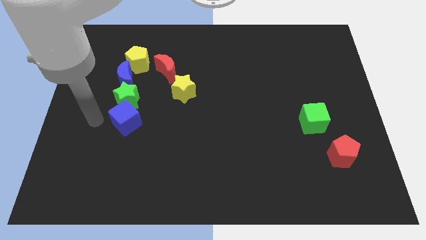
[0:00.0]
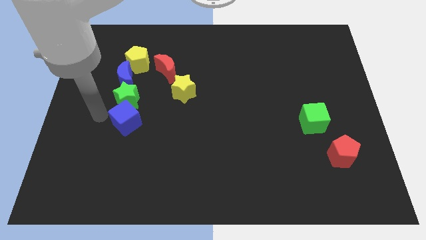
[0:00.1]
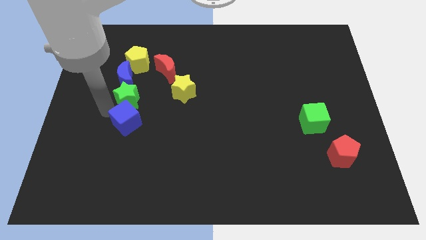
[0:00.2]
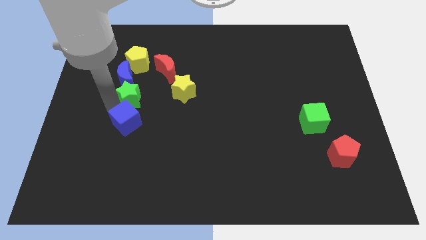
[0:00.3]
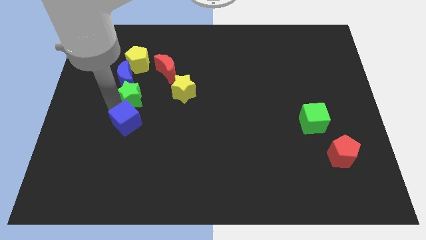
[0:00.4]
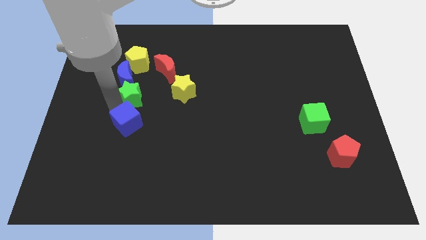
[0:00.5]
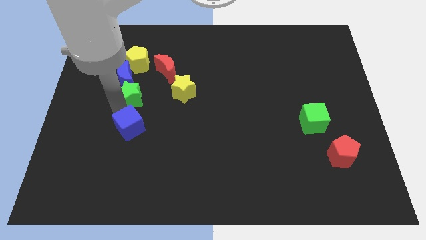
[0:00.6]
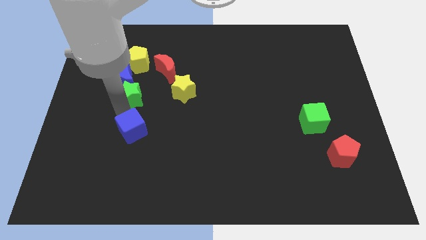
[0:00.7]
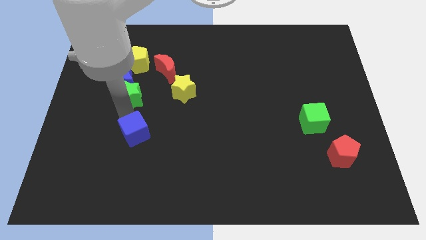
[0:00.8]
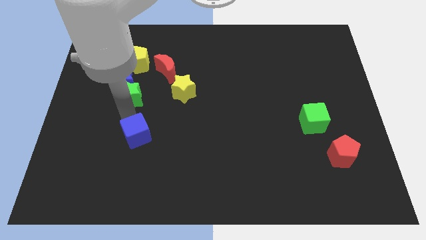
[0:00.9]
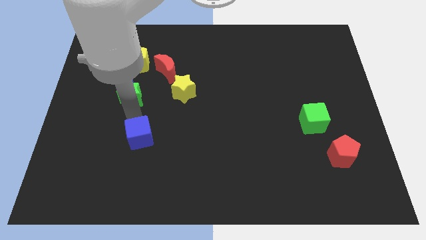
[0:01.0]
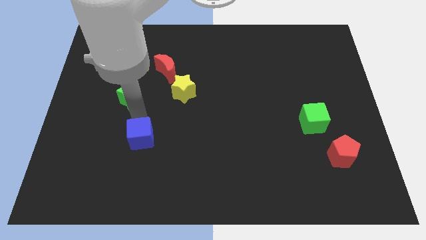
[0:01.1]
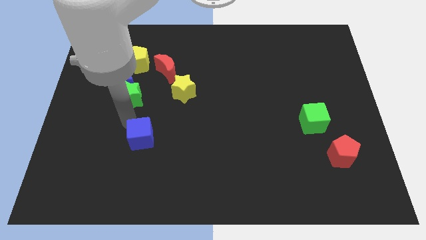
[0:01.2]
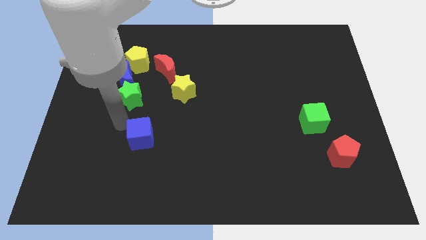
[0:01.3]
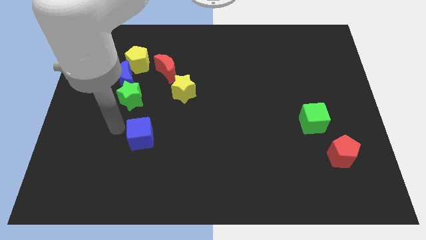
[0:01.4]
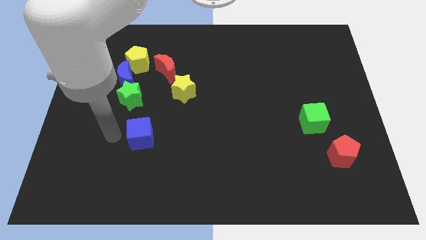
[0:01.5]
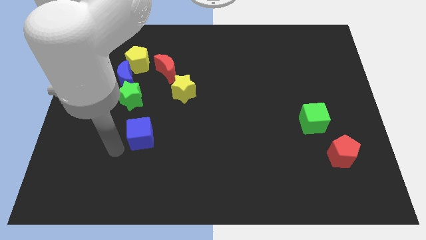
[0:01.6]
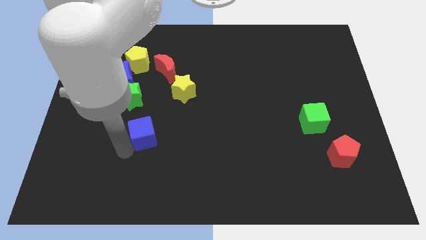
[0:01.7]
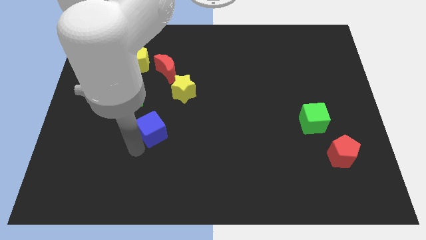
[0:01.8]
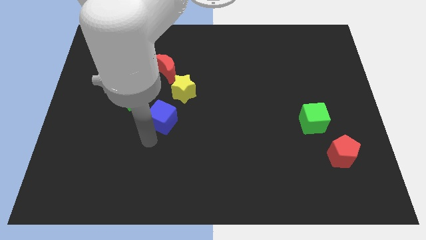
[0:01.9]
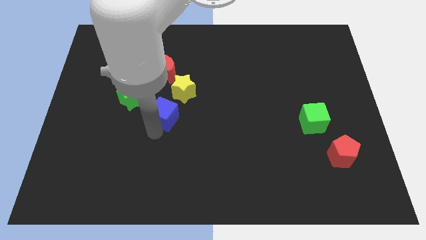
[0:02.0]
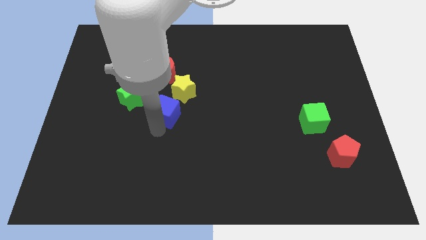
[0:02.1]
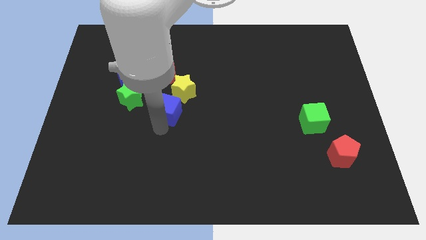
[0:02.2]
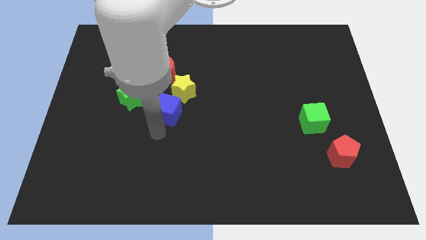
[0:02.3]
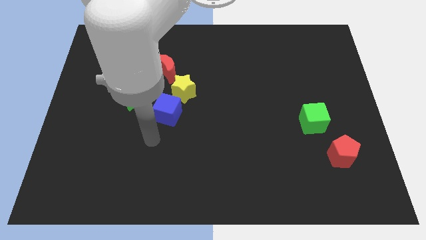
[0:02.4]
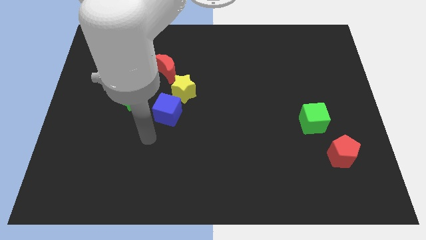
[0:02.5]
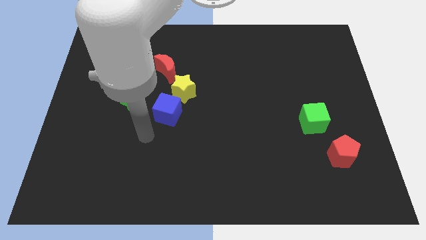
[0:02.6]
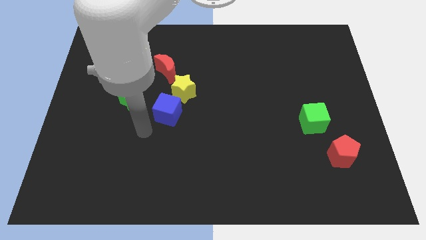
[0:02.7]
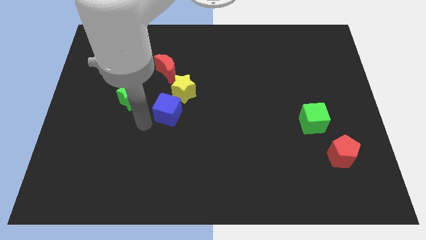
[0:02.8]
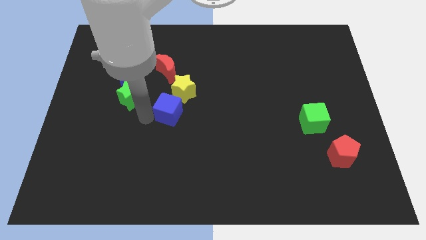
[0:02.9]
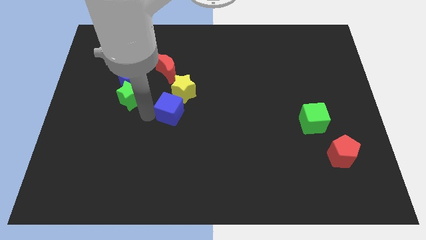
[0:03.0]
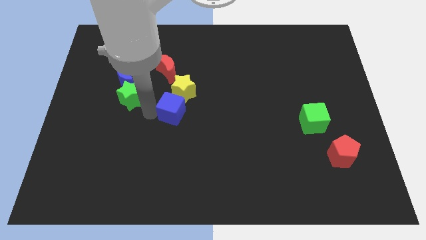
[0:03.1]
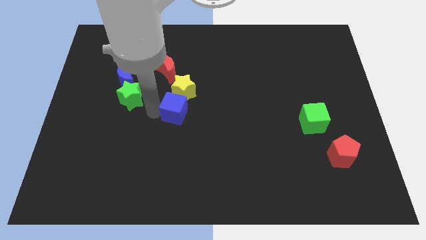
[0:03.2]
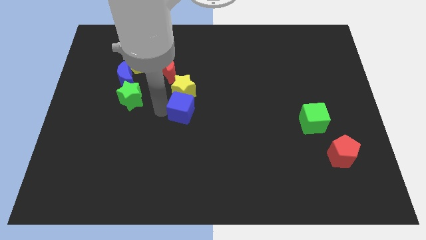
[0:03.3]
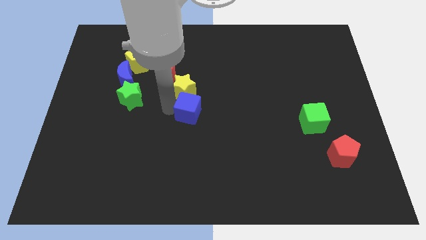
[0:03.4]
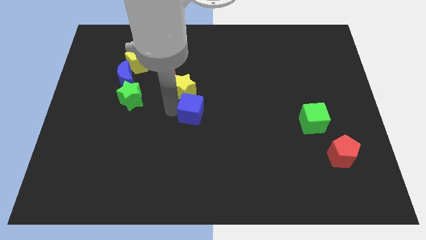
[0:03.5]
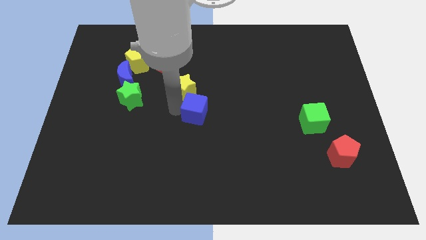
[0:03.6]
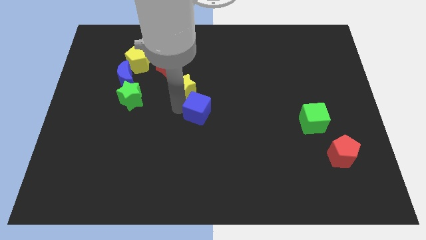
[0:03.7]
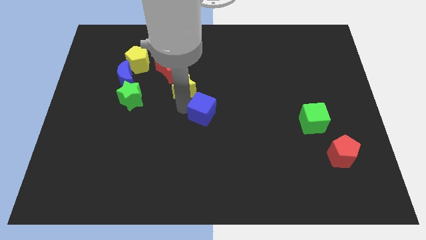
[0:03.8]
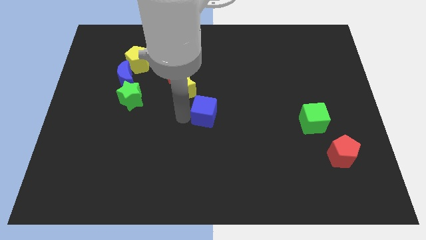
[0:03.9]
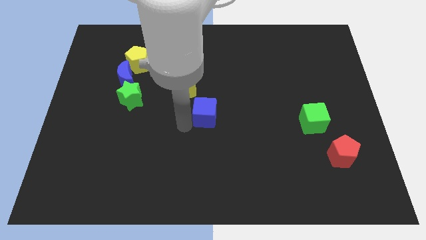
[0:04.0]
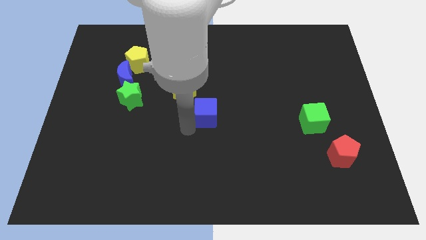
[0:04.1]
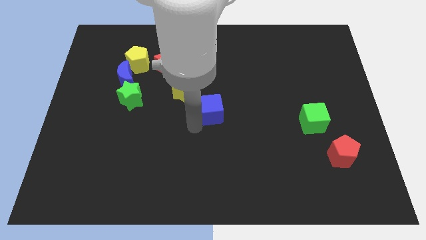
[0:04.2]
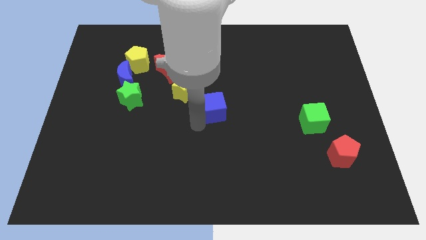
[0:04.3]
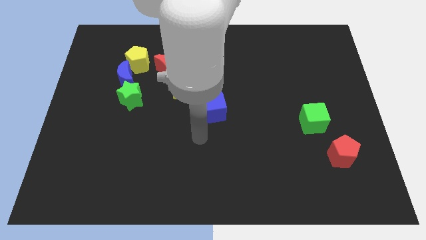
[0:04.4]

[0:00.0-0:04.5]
put the blue cube at the center of the board

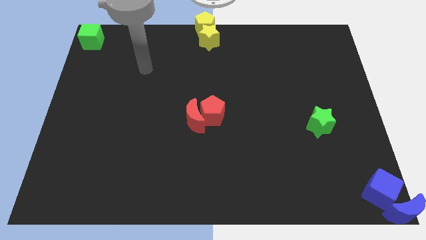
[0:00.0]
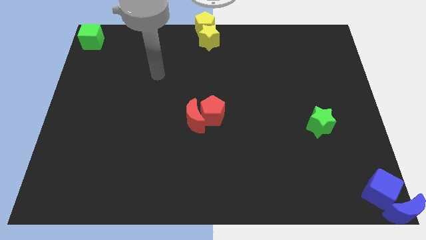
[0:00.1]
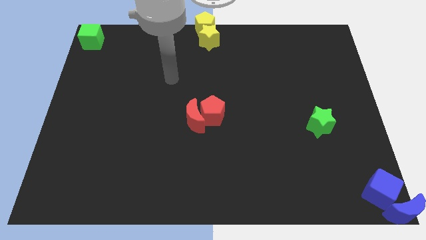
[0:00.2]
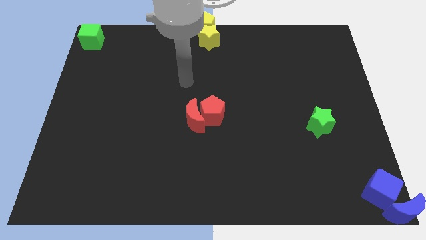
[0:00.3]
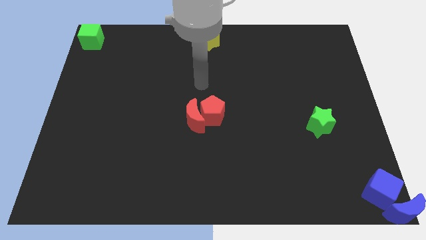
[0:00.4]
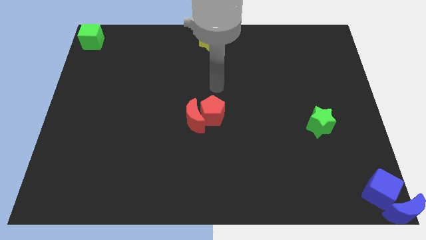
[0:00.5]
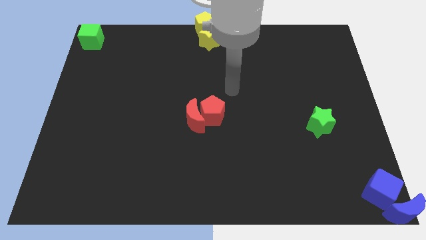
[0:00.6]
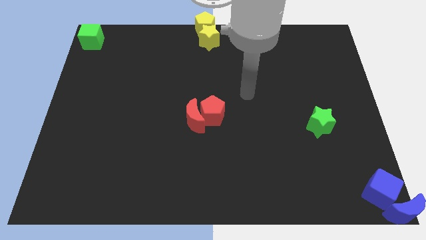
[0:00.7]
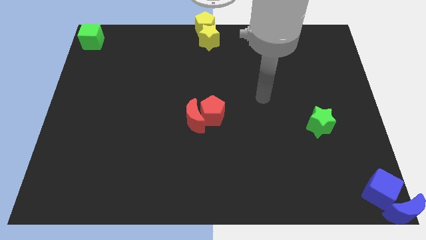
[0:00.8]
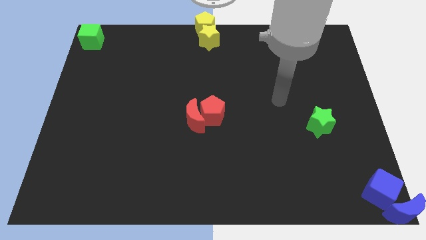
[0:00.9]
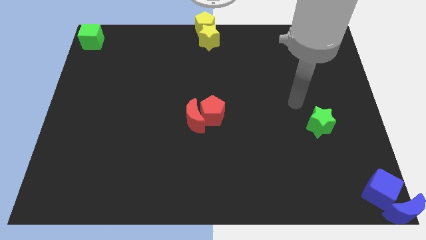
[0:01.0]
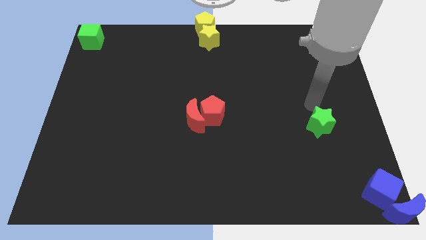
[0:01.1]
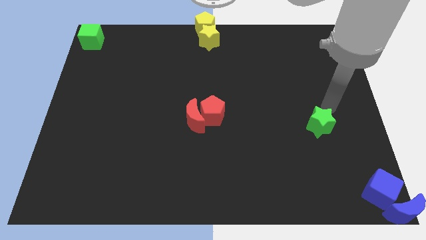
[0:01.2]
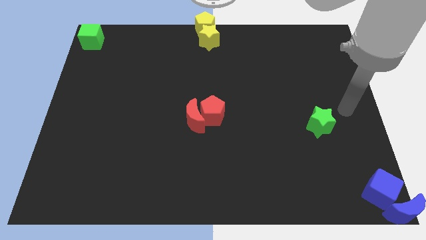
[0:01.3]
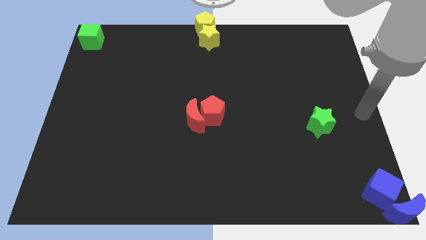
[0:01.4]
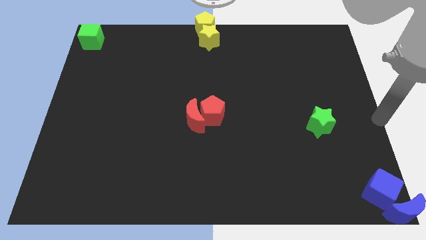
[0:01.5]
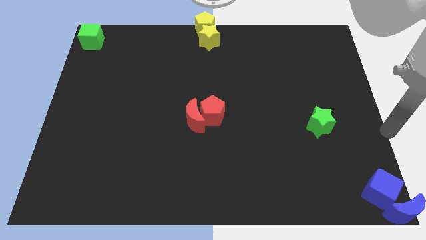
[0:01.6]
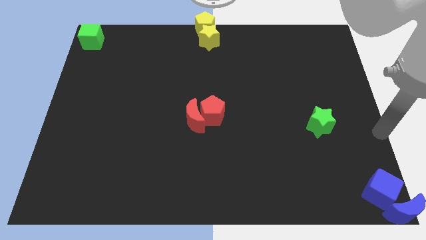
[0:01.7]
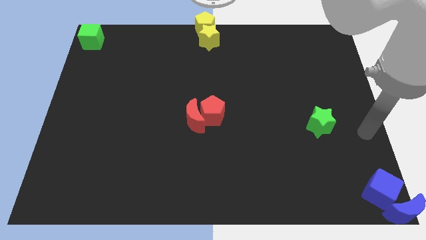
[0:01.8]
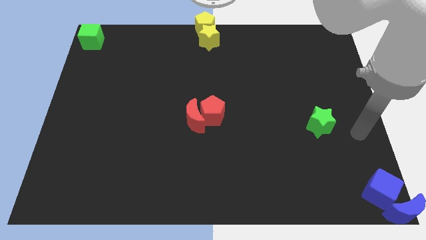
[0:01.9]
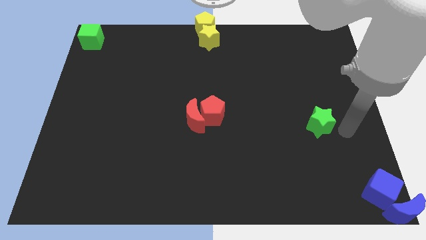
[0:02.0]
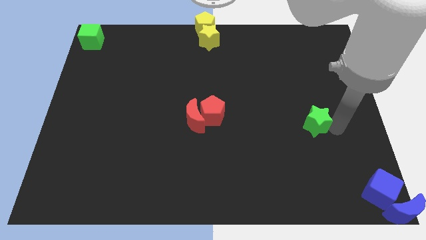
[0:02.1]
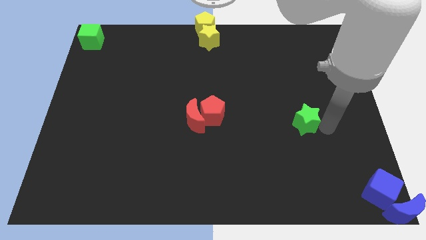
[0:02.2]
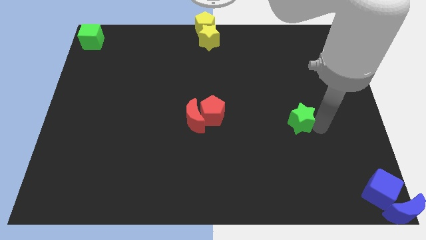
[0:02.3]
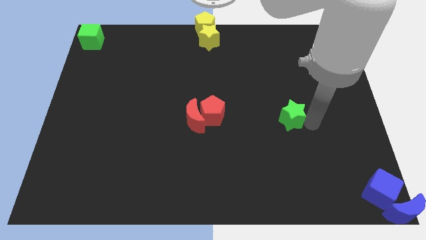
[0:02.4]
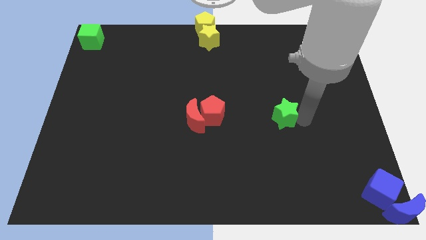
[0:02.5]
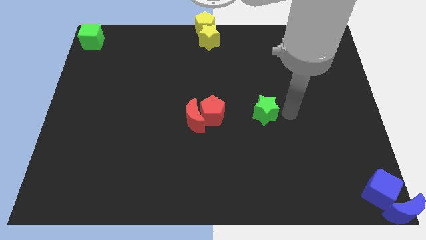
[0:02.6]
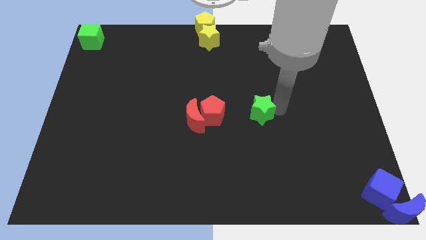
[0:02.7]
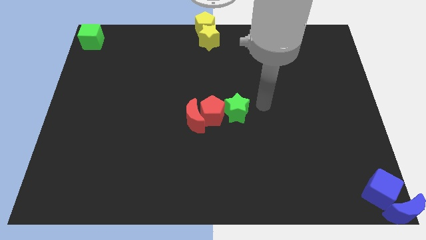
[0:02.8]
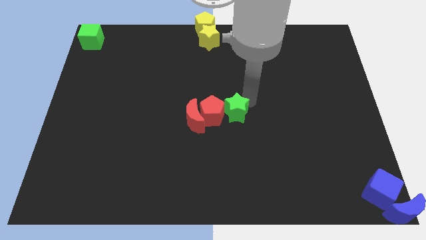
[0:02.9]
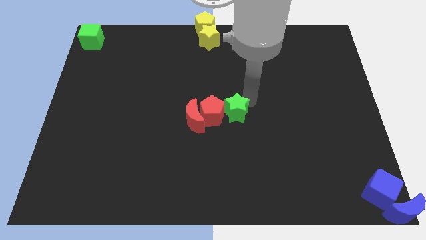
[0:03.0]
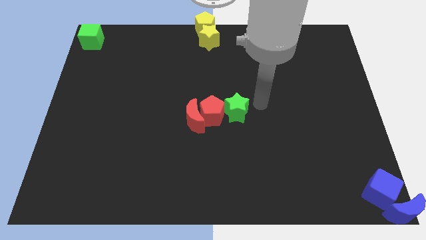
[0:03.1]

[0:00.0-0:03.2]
place the green star right to the red pentagon

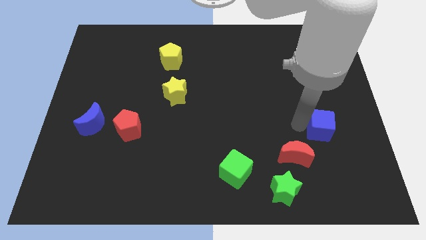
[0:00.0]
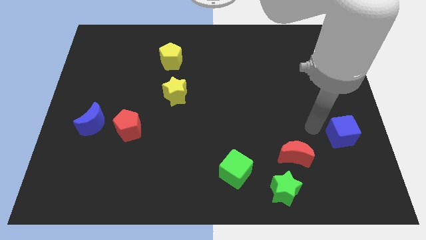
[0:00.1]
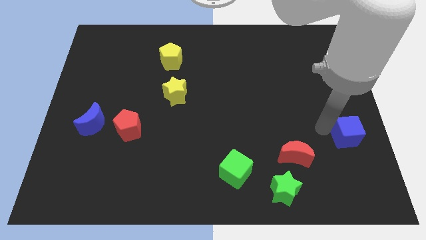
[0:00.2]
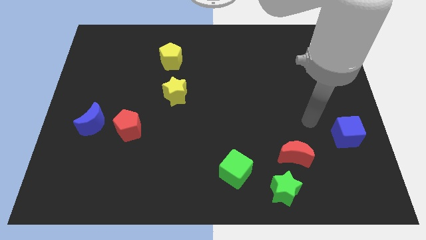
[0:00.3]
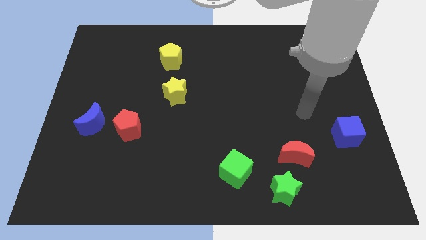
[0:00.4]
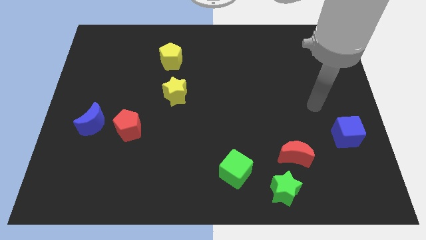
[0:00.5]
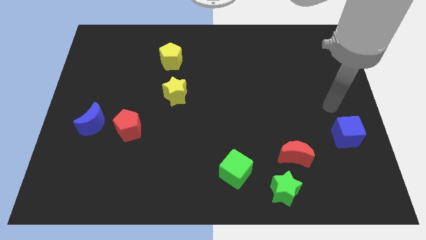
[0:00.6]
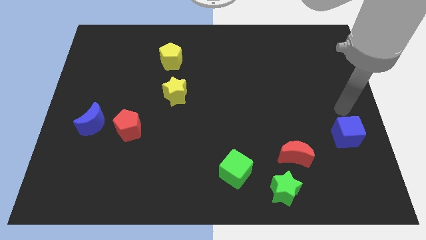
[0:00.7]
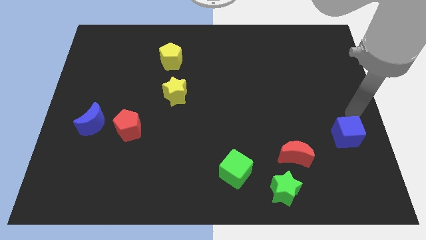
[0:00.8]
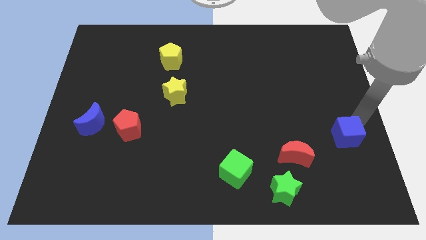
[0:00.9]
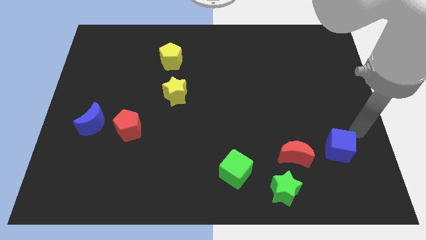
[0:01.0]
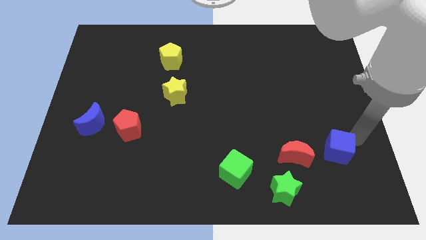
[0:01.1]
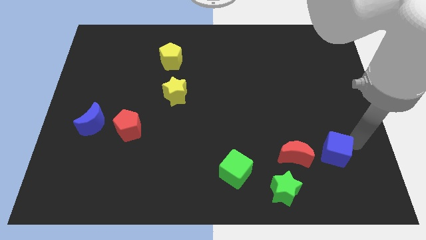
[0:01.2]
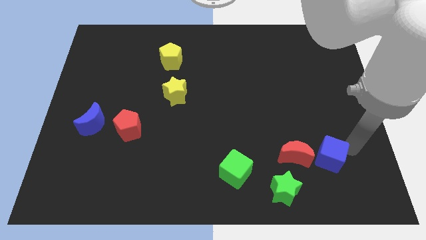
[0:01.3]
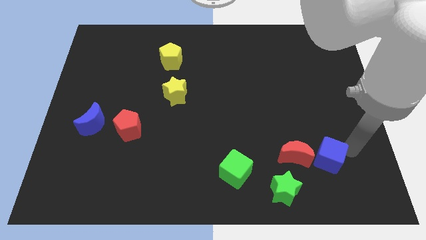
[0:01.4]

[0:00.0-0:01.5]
push the blue cube to the right of the red crescent
